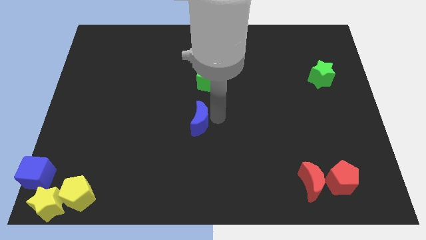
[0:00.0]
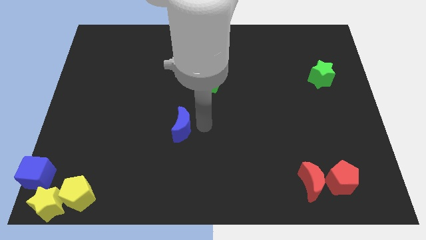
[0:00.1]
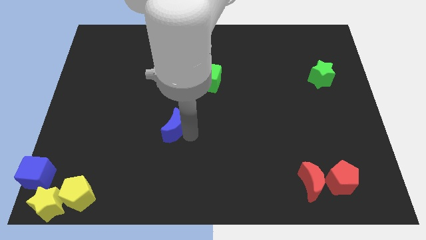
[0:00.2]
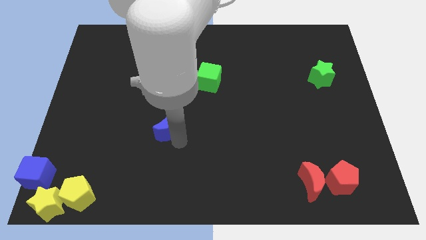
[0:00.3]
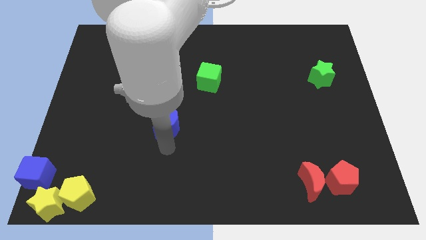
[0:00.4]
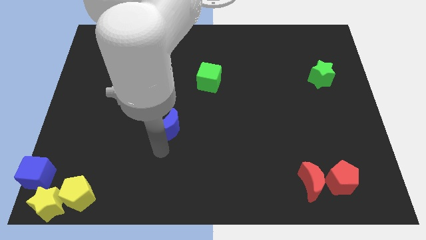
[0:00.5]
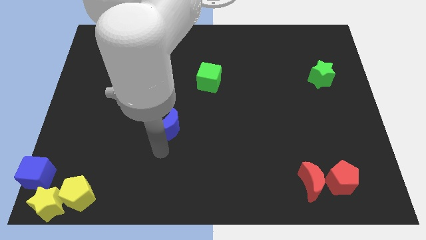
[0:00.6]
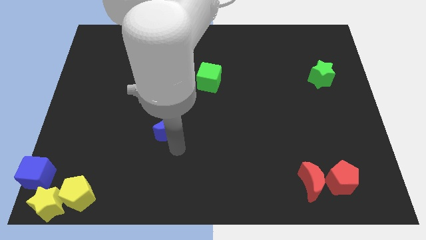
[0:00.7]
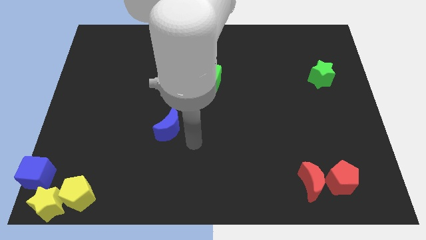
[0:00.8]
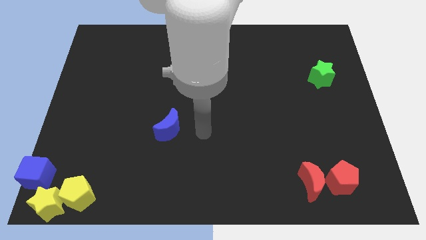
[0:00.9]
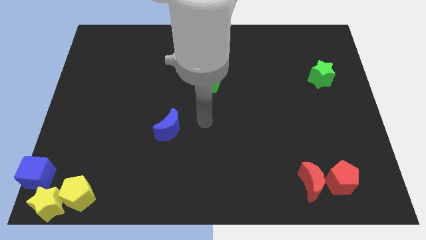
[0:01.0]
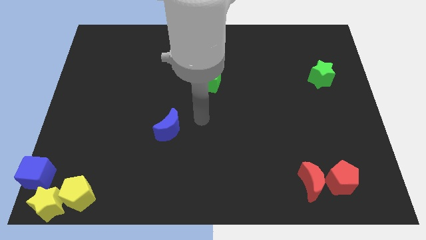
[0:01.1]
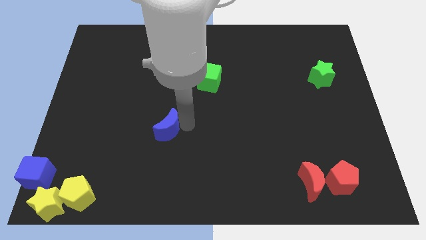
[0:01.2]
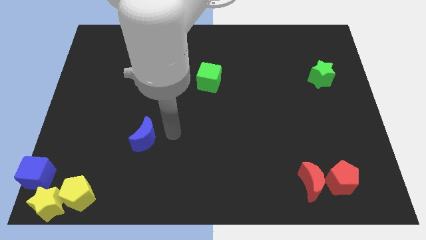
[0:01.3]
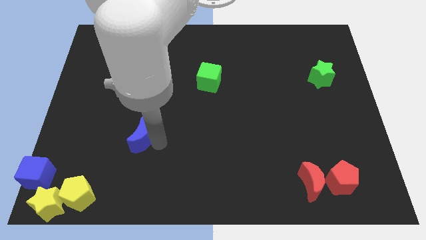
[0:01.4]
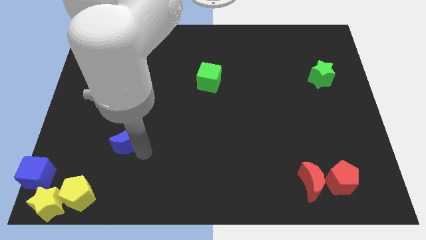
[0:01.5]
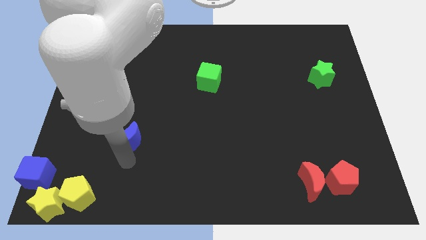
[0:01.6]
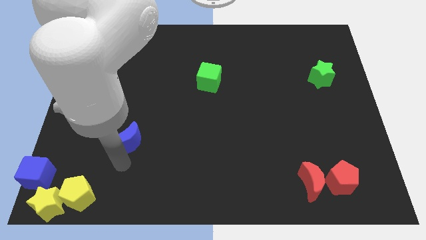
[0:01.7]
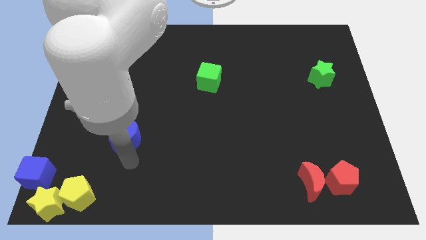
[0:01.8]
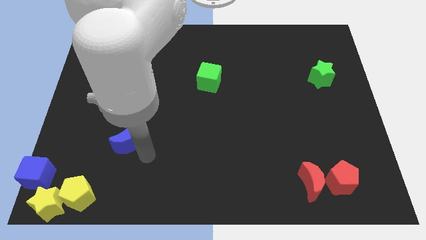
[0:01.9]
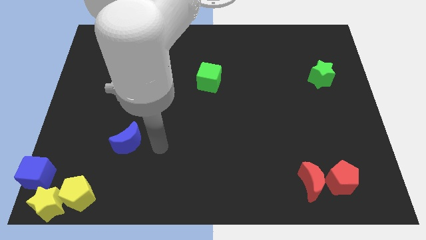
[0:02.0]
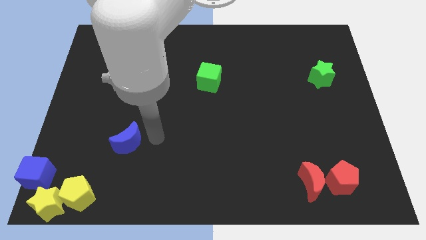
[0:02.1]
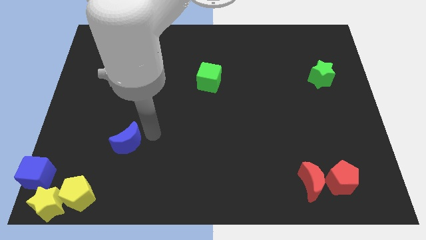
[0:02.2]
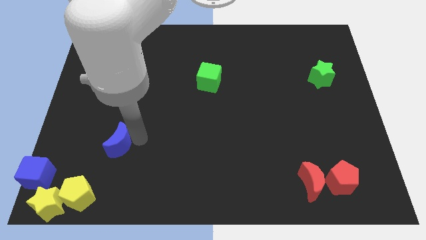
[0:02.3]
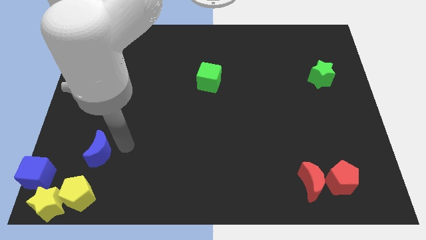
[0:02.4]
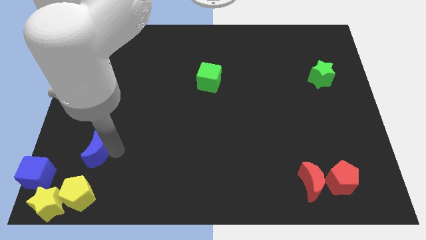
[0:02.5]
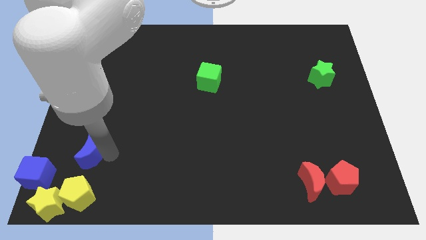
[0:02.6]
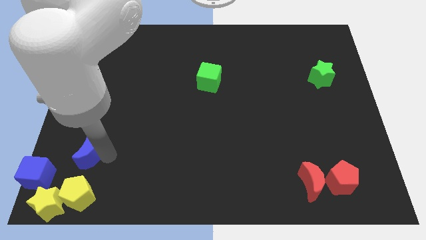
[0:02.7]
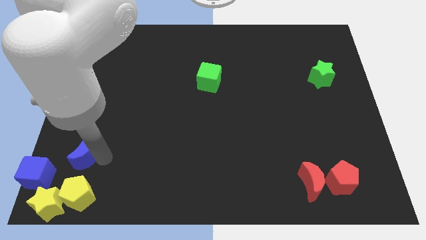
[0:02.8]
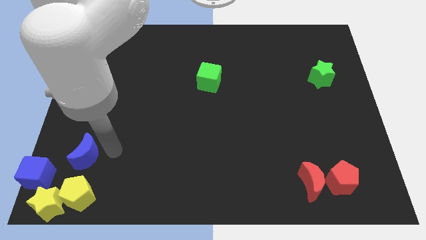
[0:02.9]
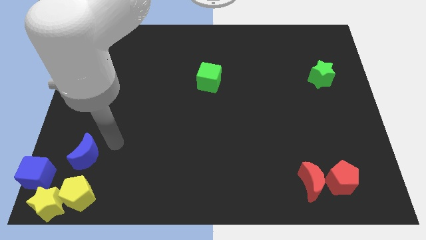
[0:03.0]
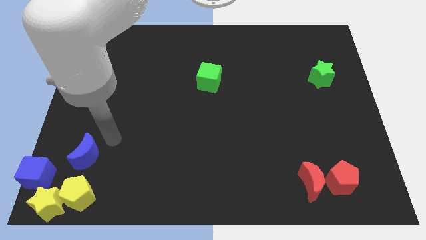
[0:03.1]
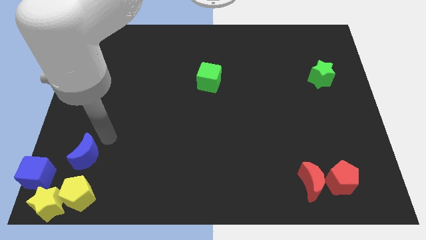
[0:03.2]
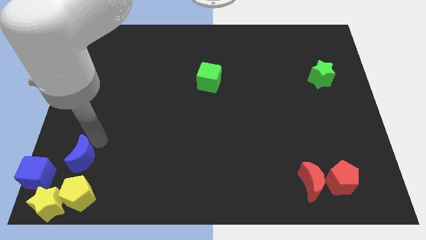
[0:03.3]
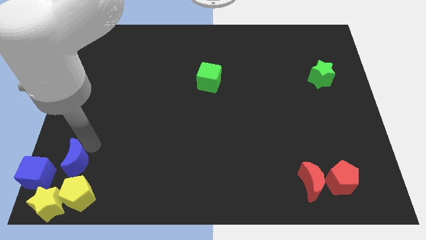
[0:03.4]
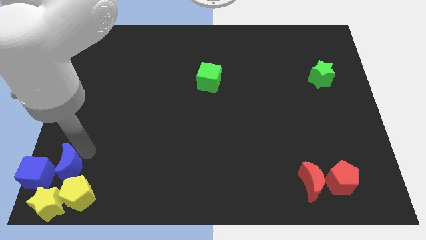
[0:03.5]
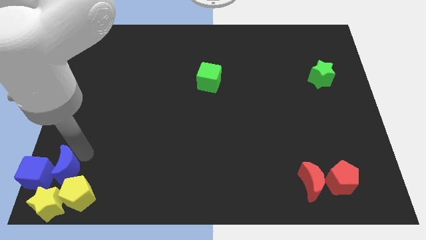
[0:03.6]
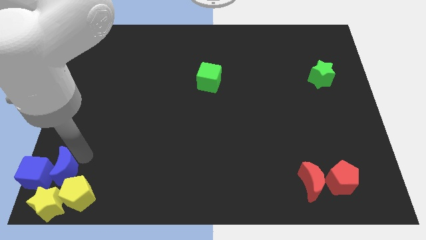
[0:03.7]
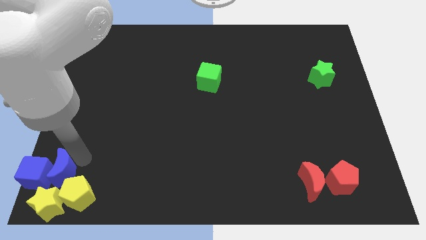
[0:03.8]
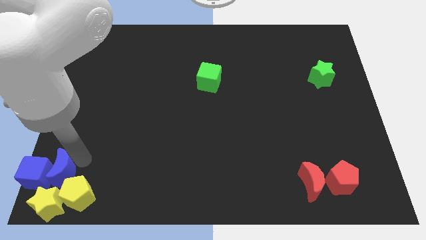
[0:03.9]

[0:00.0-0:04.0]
slide the blue moon into the group of blocks at the bottom left of the table

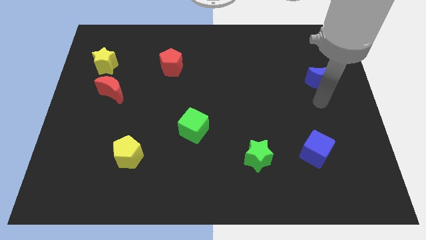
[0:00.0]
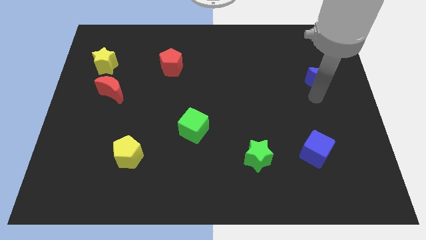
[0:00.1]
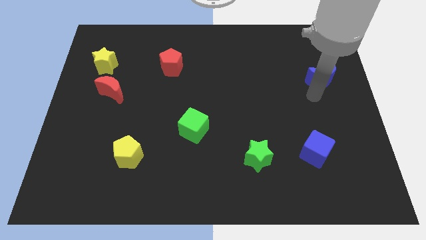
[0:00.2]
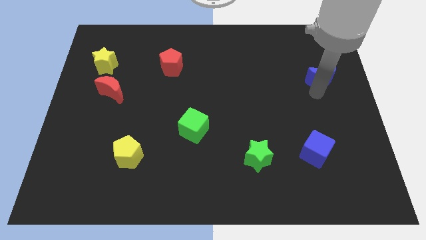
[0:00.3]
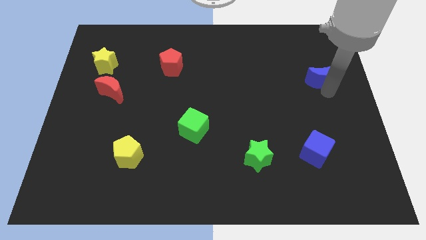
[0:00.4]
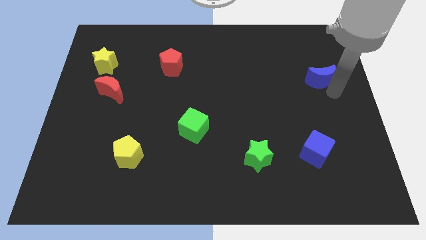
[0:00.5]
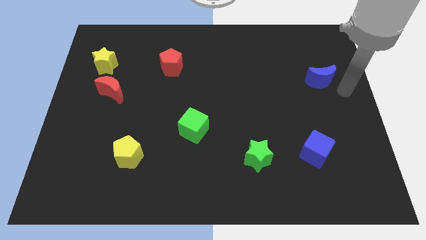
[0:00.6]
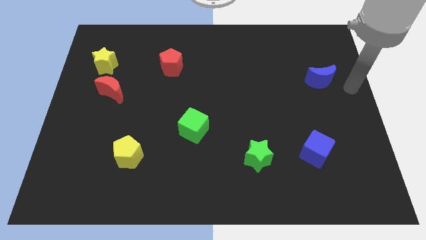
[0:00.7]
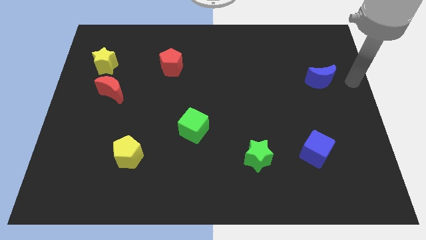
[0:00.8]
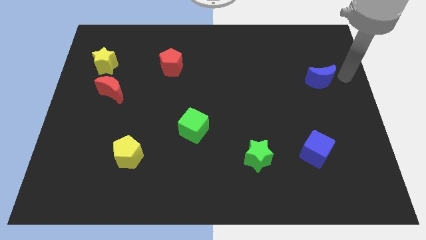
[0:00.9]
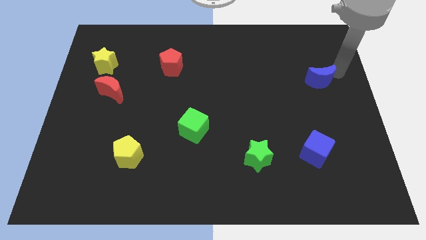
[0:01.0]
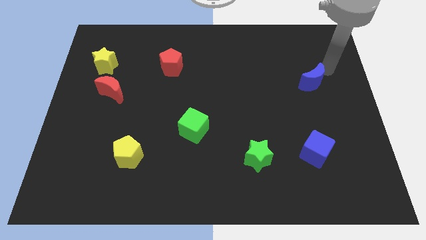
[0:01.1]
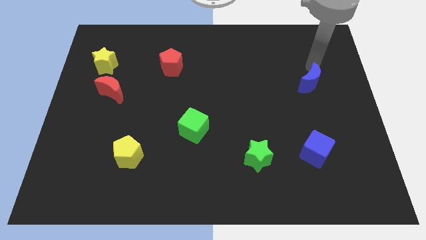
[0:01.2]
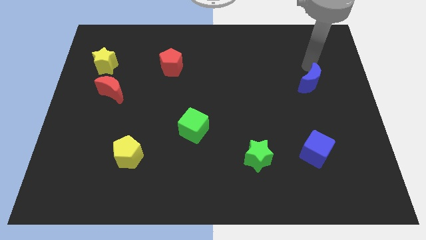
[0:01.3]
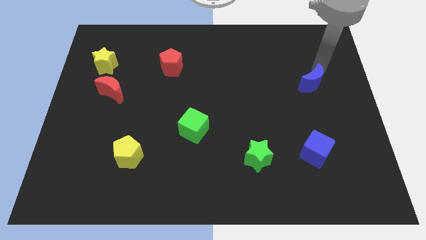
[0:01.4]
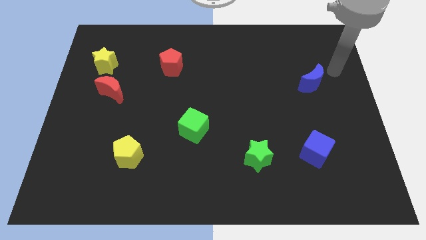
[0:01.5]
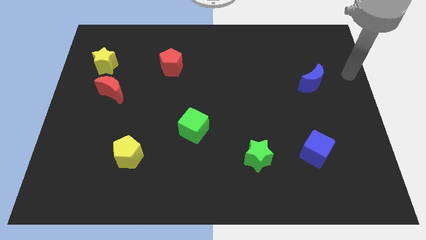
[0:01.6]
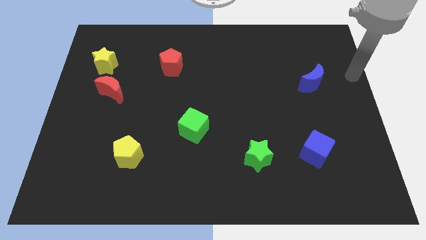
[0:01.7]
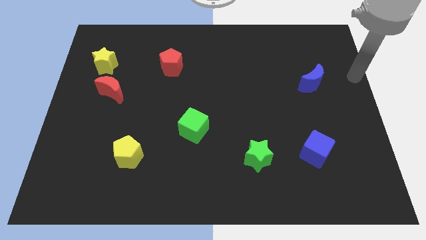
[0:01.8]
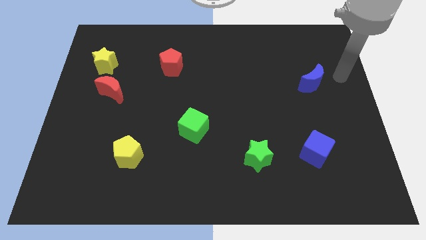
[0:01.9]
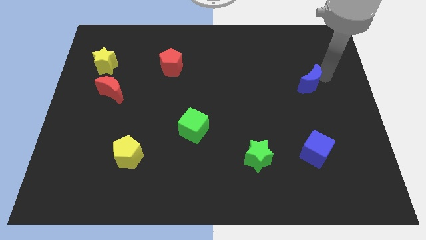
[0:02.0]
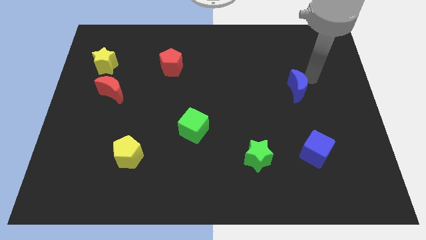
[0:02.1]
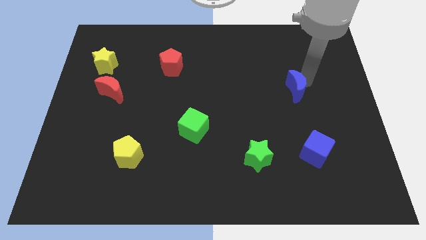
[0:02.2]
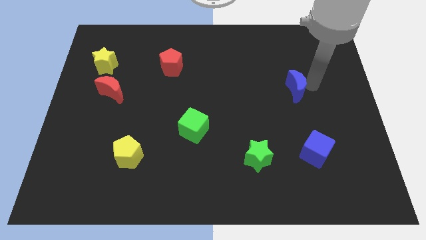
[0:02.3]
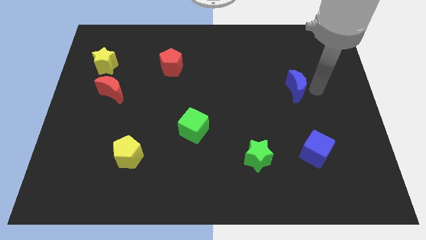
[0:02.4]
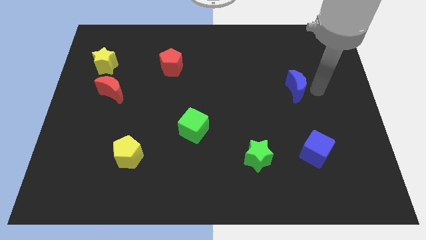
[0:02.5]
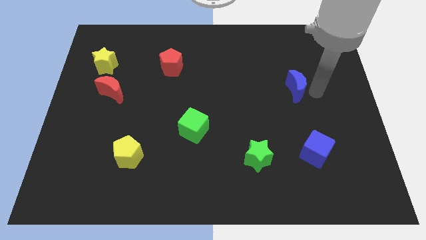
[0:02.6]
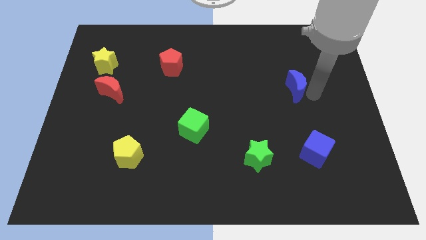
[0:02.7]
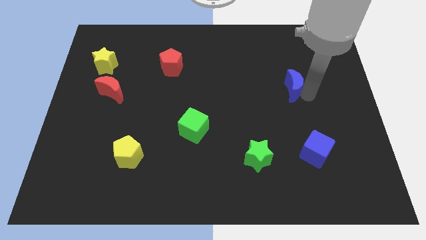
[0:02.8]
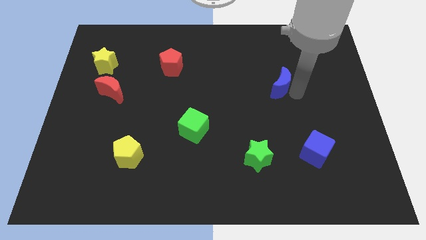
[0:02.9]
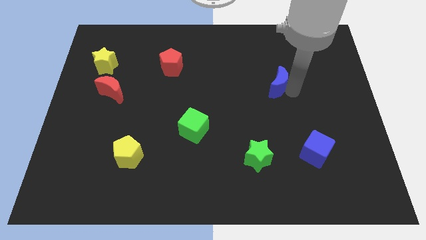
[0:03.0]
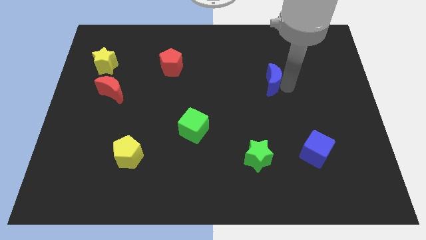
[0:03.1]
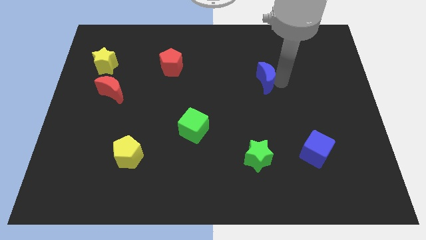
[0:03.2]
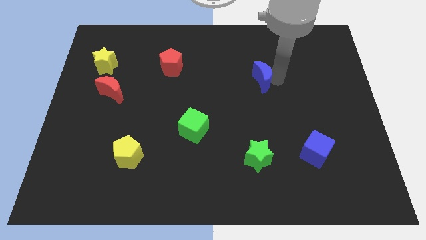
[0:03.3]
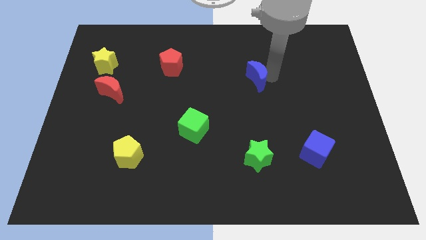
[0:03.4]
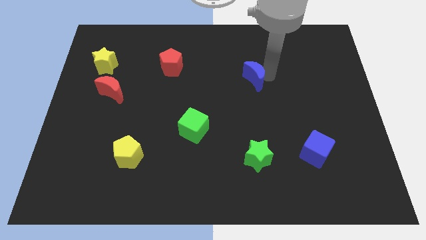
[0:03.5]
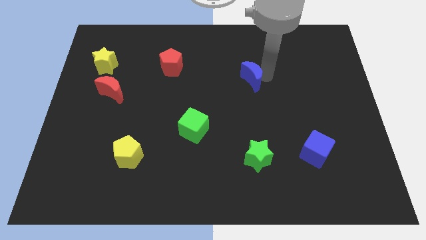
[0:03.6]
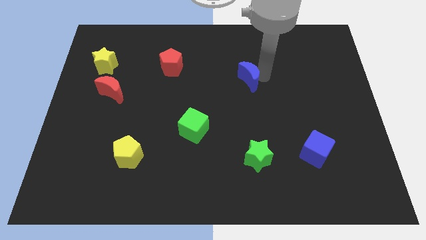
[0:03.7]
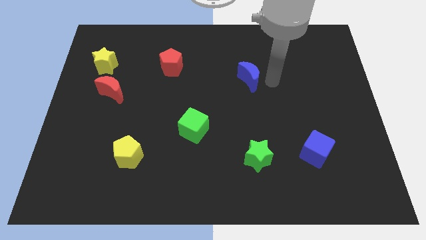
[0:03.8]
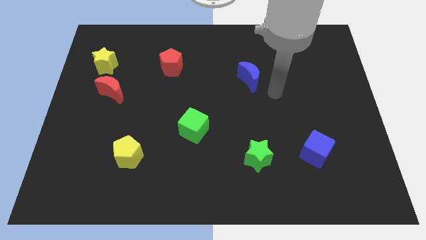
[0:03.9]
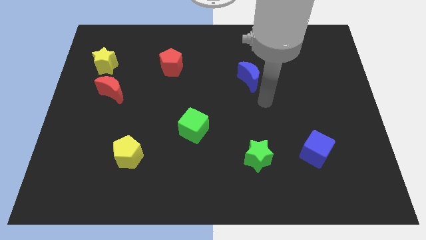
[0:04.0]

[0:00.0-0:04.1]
move the blue moon vertically above the green star

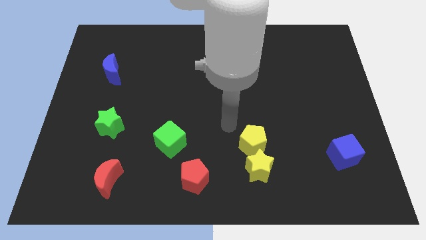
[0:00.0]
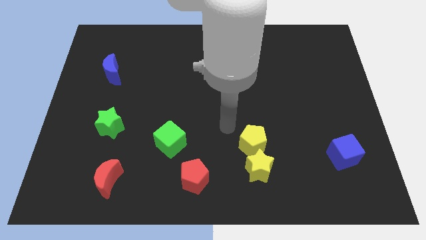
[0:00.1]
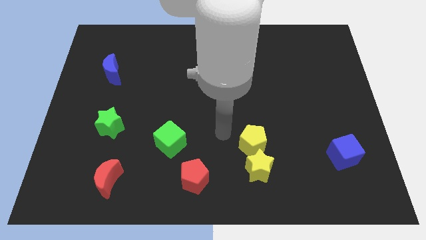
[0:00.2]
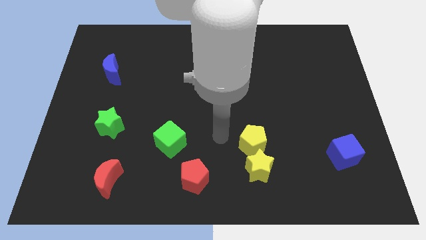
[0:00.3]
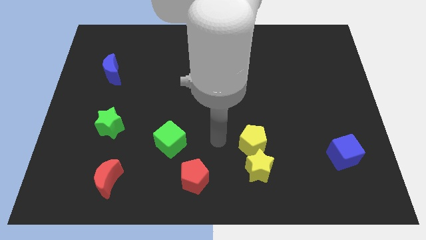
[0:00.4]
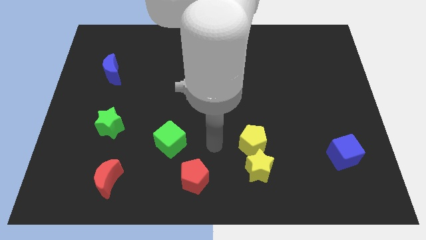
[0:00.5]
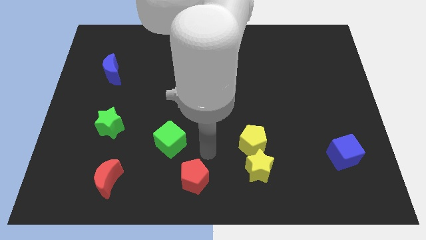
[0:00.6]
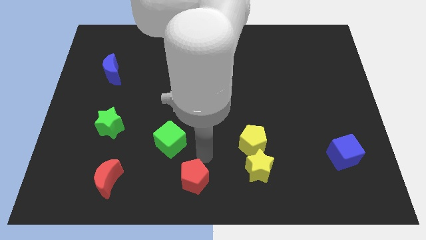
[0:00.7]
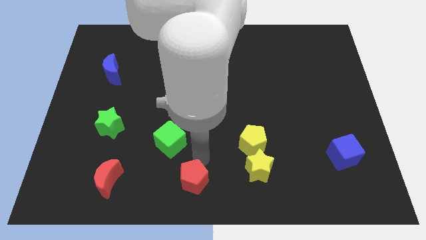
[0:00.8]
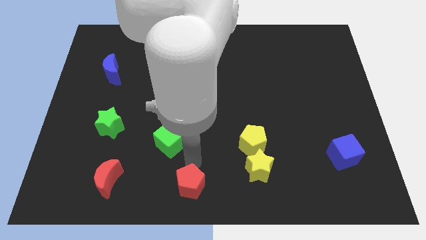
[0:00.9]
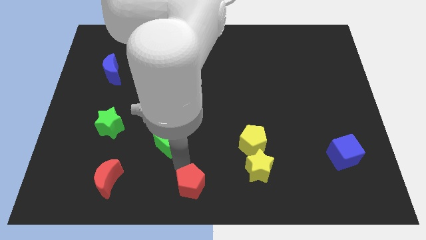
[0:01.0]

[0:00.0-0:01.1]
touch the top side of the red pentagon
